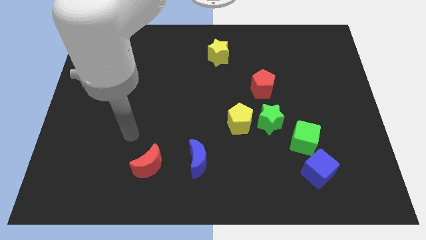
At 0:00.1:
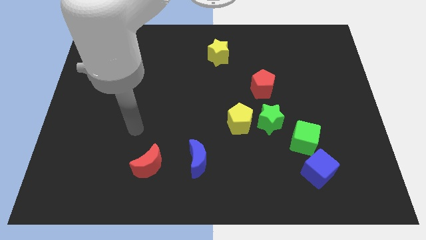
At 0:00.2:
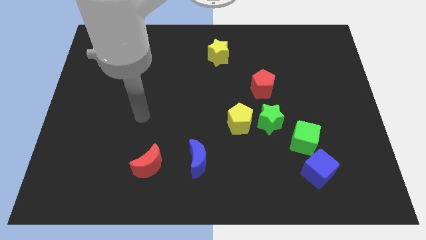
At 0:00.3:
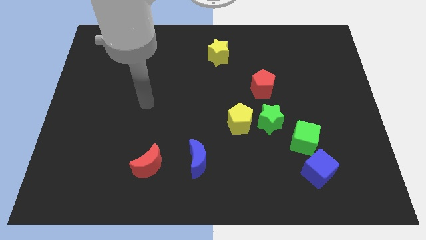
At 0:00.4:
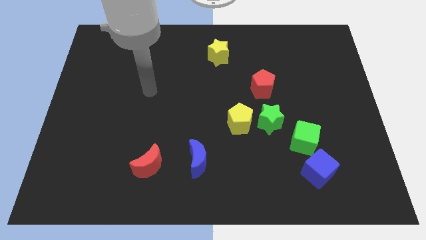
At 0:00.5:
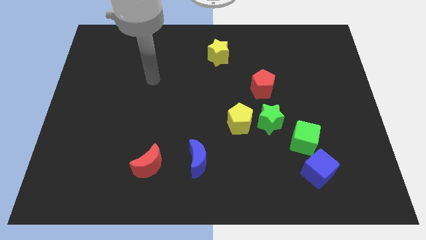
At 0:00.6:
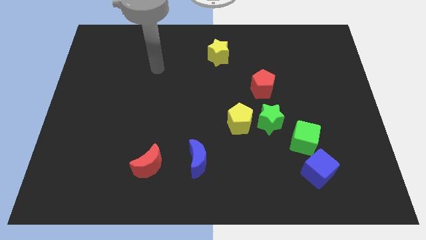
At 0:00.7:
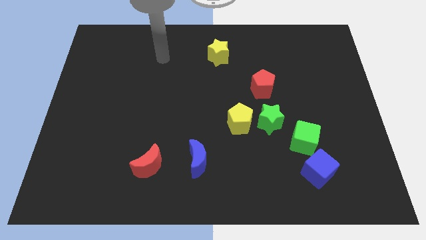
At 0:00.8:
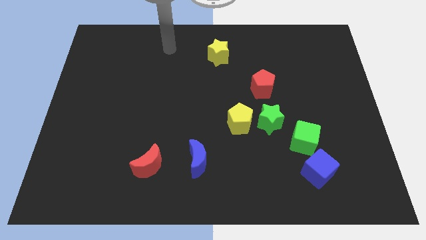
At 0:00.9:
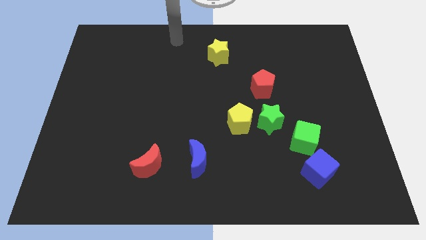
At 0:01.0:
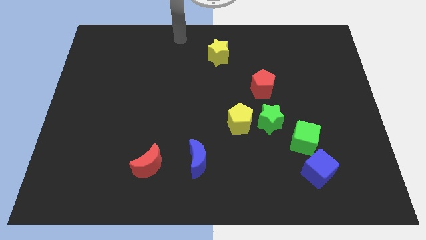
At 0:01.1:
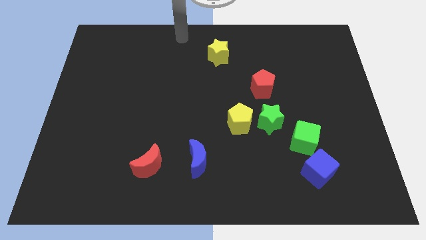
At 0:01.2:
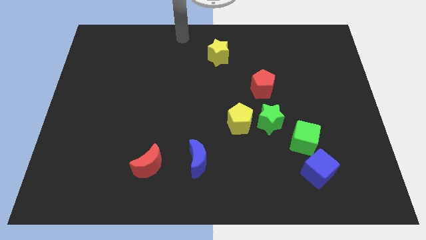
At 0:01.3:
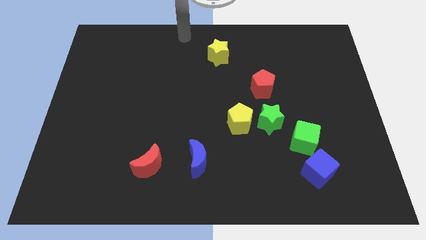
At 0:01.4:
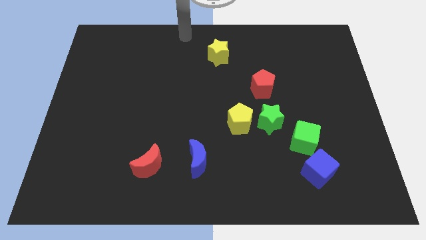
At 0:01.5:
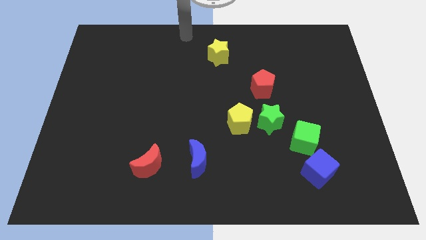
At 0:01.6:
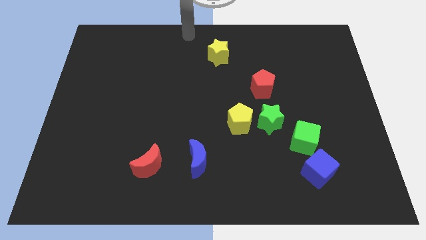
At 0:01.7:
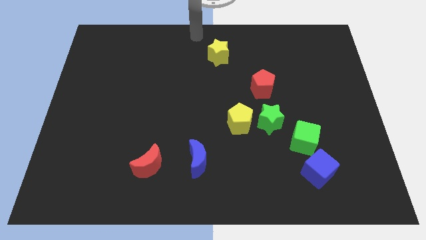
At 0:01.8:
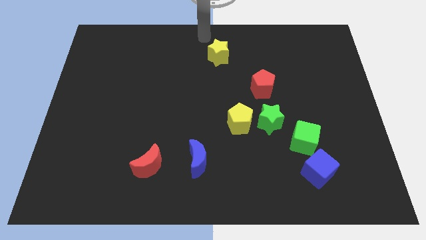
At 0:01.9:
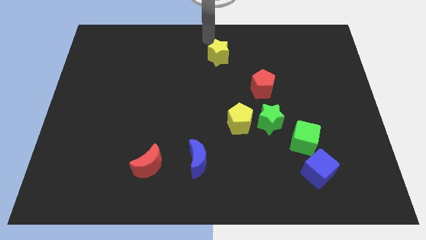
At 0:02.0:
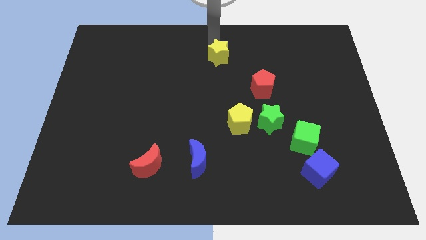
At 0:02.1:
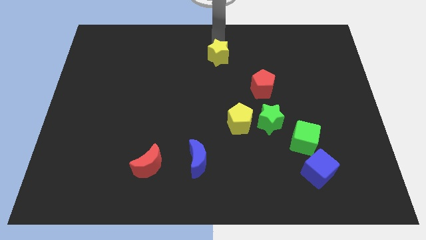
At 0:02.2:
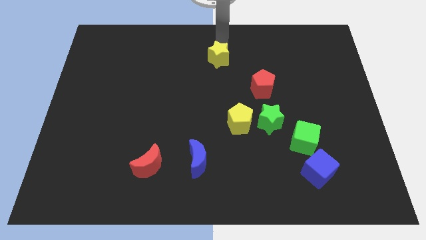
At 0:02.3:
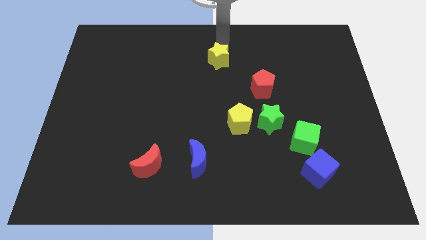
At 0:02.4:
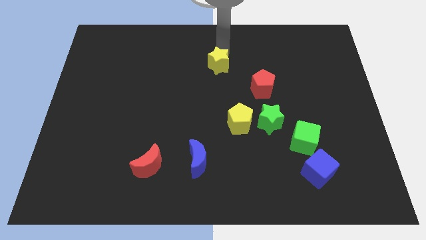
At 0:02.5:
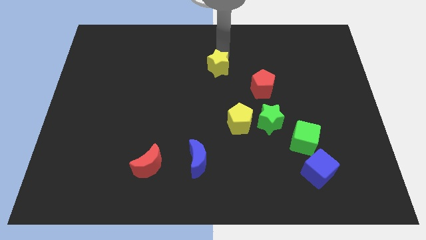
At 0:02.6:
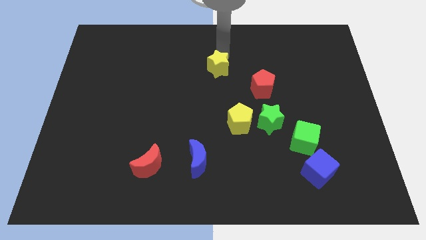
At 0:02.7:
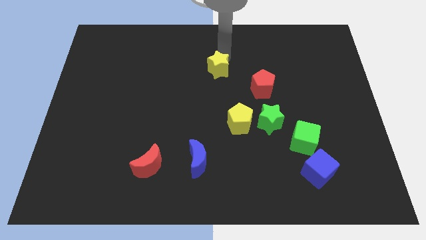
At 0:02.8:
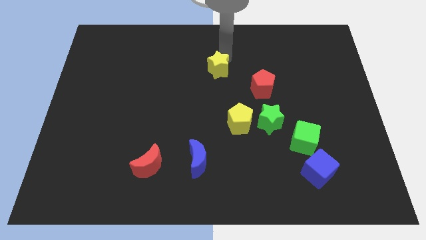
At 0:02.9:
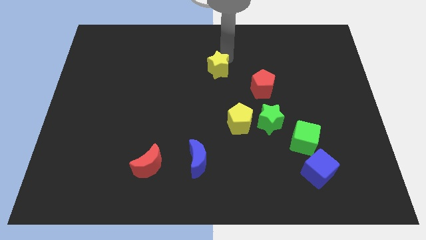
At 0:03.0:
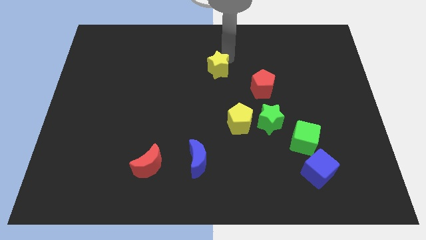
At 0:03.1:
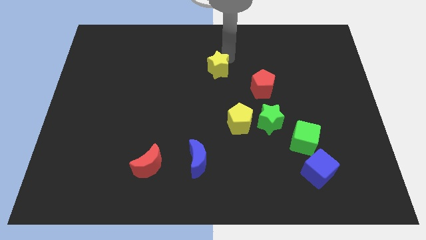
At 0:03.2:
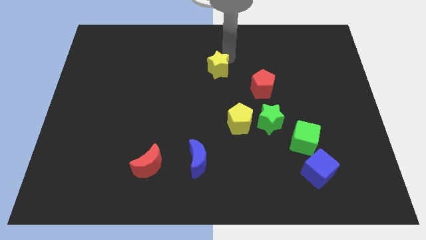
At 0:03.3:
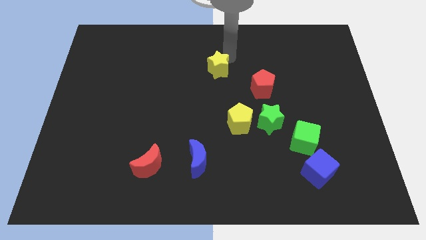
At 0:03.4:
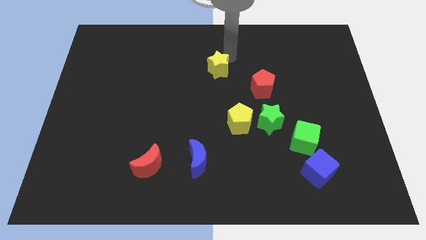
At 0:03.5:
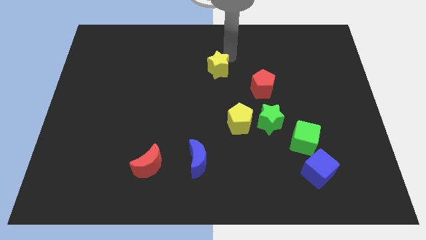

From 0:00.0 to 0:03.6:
push yellow star downwards

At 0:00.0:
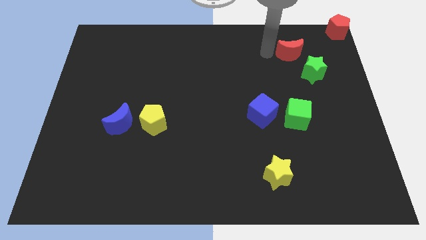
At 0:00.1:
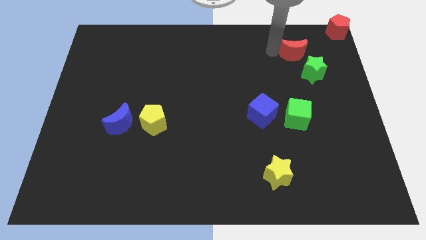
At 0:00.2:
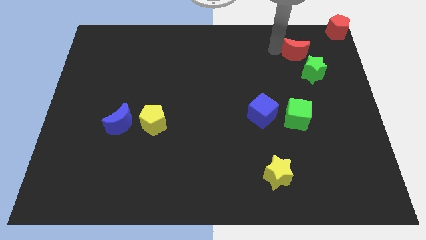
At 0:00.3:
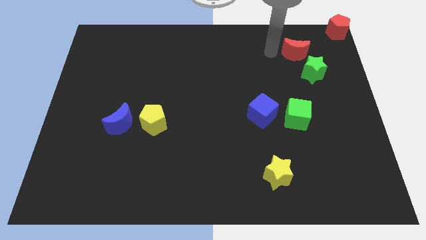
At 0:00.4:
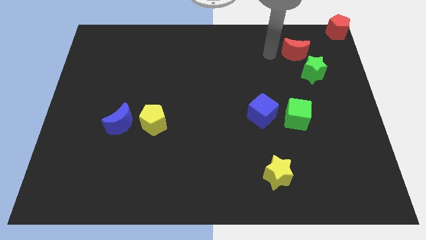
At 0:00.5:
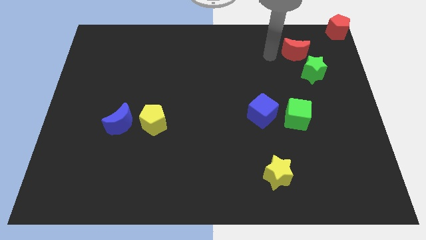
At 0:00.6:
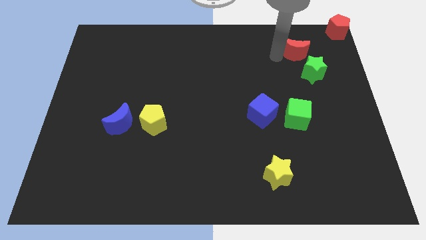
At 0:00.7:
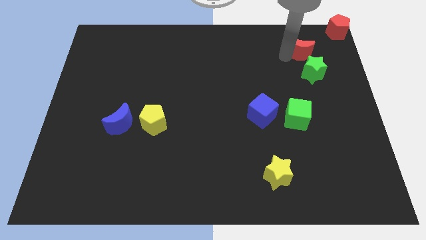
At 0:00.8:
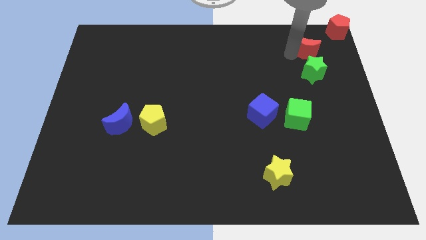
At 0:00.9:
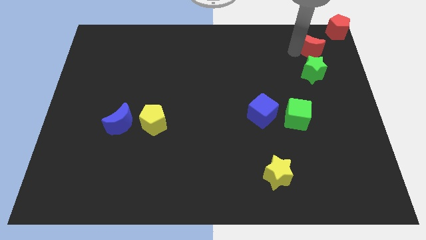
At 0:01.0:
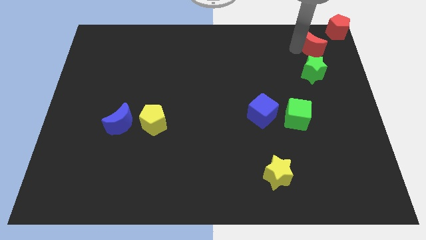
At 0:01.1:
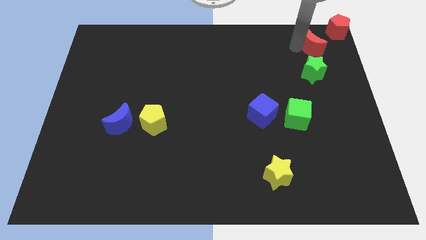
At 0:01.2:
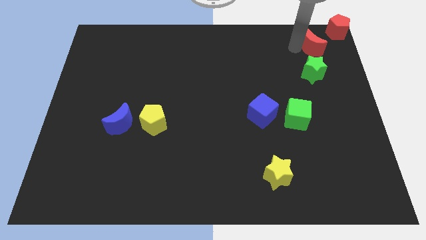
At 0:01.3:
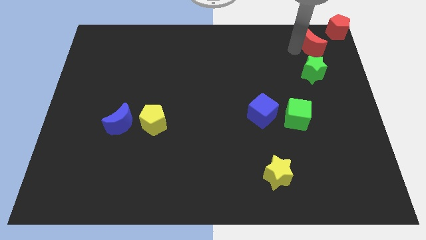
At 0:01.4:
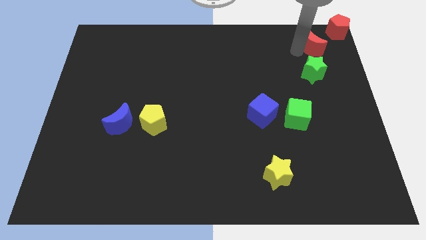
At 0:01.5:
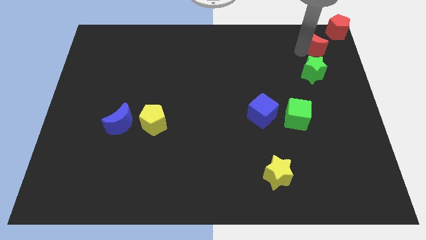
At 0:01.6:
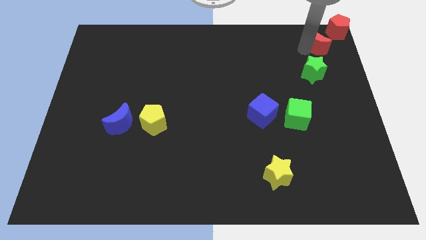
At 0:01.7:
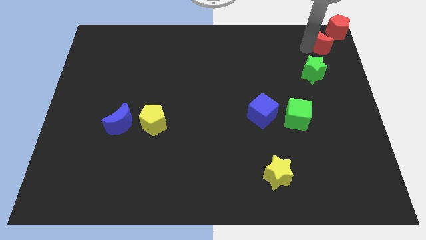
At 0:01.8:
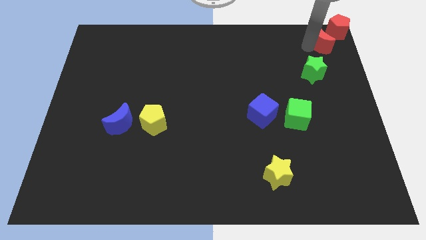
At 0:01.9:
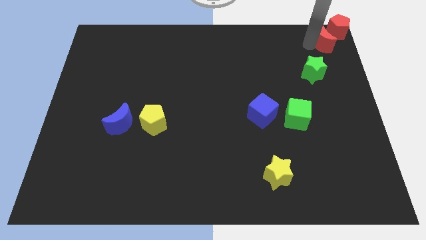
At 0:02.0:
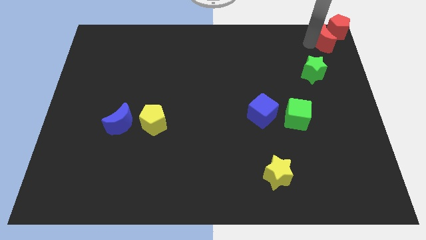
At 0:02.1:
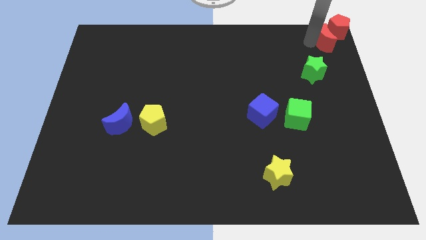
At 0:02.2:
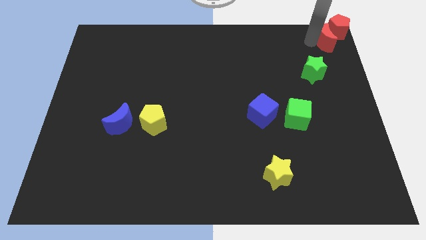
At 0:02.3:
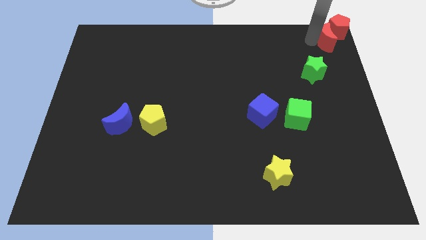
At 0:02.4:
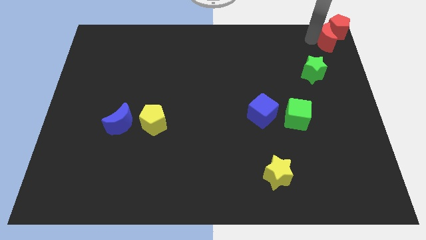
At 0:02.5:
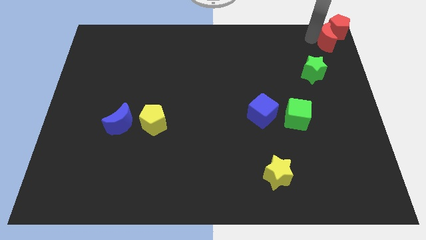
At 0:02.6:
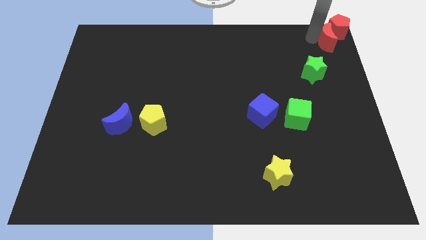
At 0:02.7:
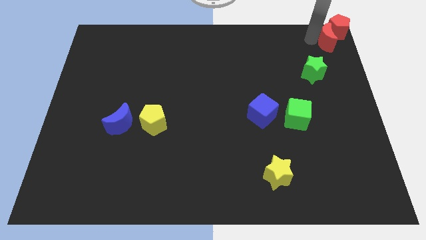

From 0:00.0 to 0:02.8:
move red crescent into red pentagon

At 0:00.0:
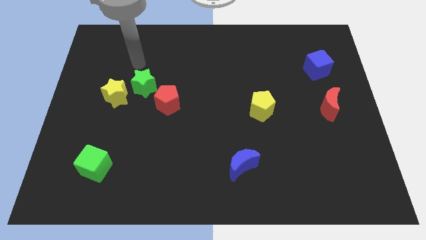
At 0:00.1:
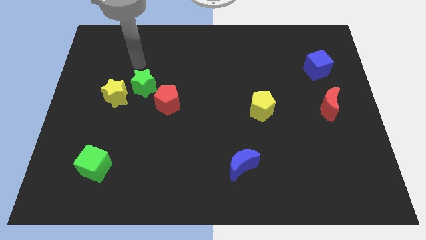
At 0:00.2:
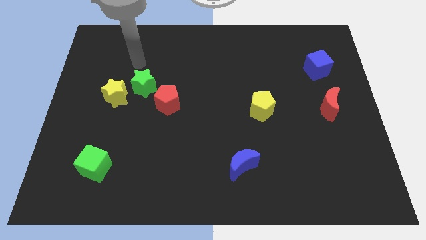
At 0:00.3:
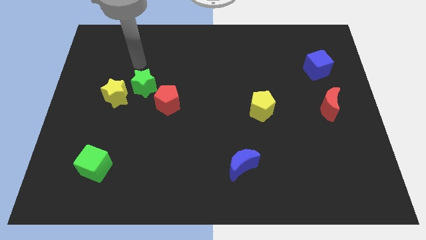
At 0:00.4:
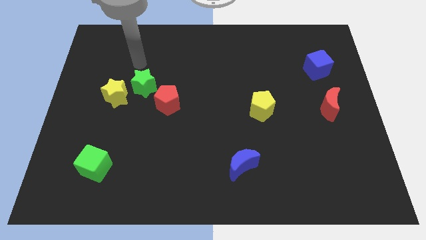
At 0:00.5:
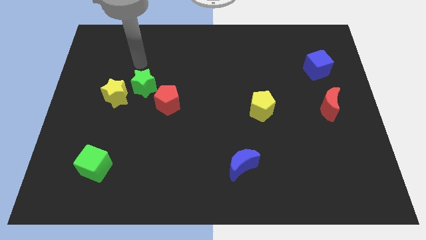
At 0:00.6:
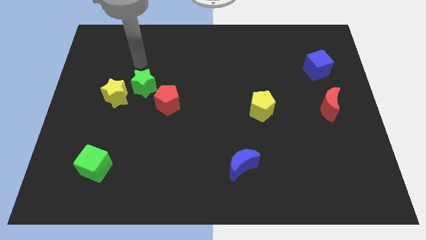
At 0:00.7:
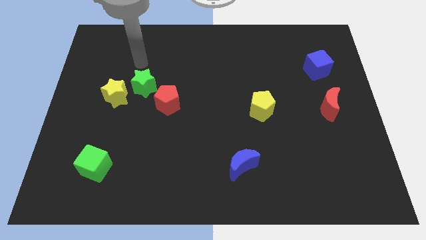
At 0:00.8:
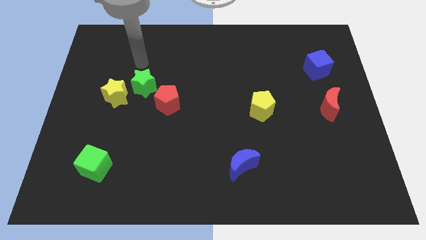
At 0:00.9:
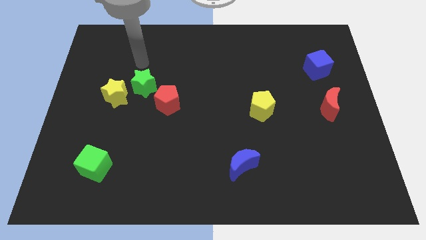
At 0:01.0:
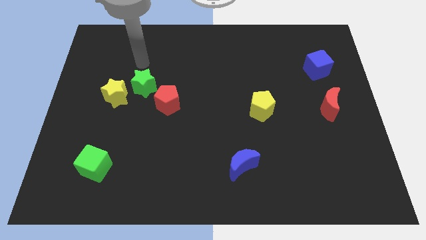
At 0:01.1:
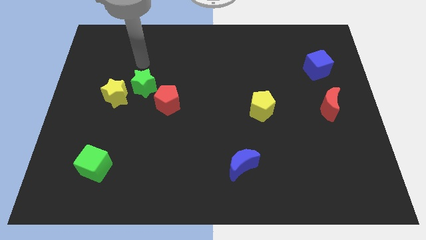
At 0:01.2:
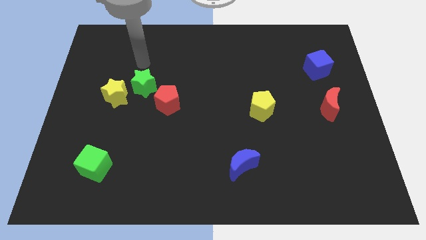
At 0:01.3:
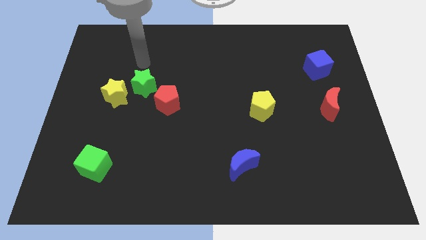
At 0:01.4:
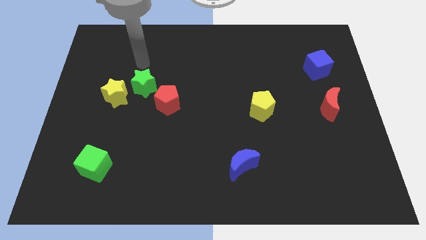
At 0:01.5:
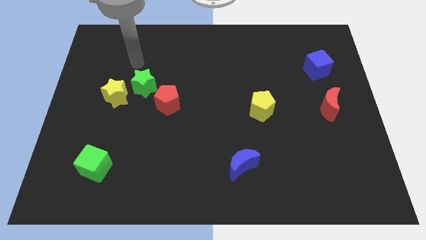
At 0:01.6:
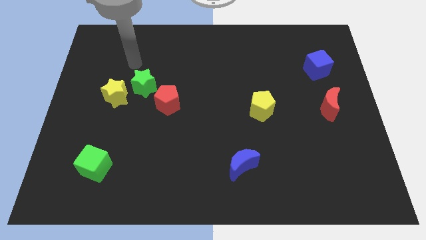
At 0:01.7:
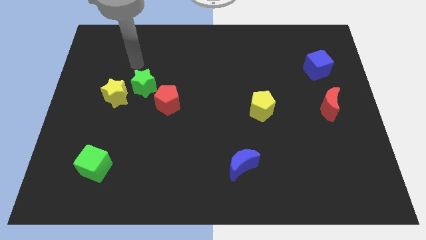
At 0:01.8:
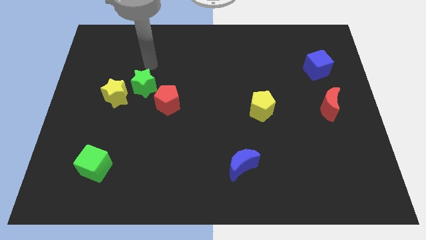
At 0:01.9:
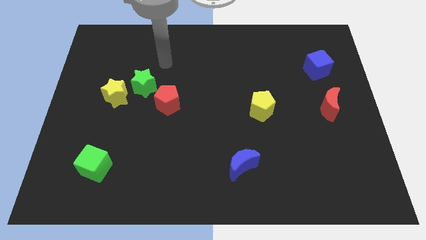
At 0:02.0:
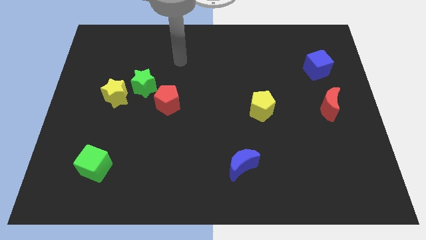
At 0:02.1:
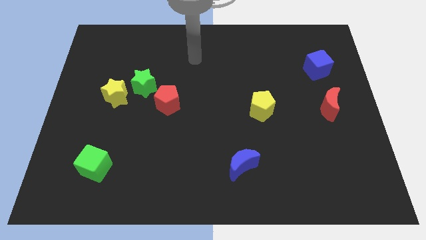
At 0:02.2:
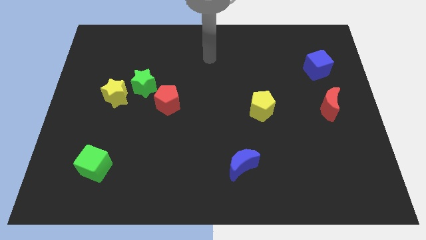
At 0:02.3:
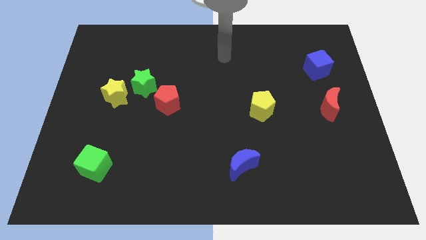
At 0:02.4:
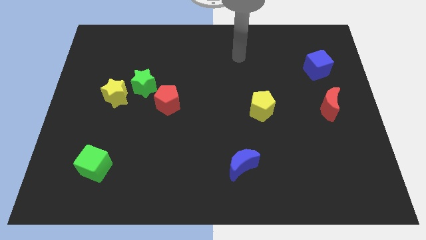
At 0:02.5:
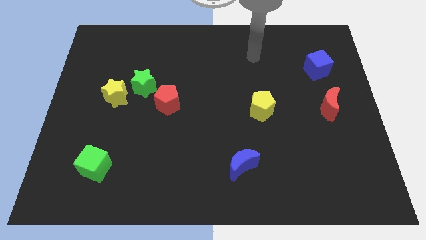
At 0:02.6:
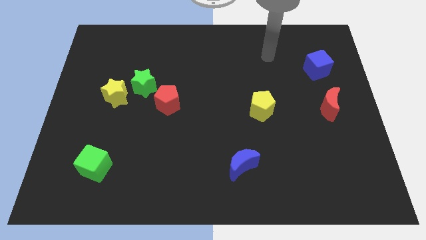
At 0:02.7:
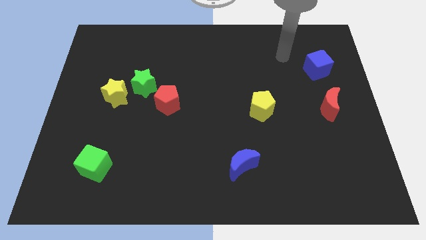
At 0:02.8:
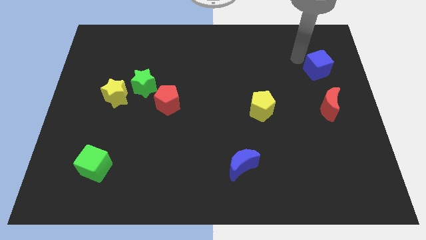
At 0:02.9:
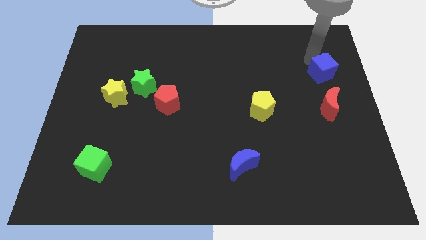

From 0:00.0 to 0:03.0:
move your arm to the blue cube
